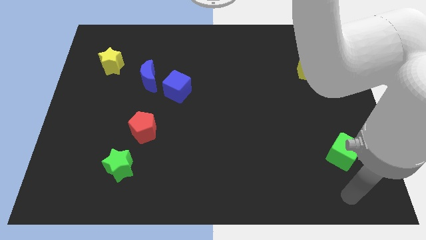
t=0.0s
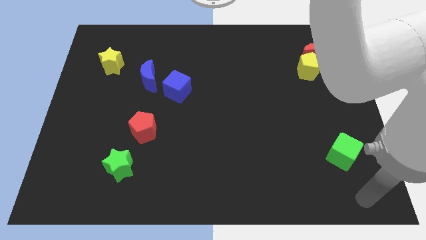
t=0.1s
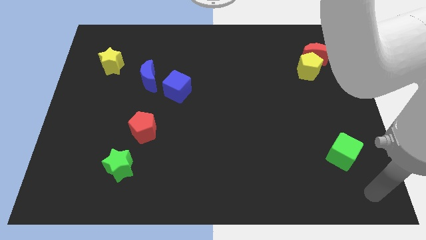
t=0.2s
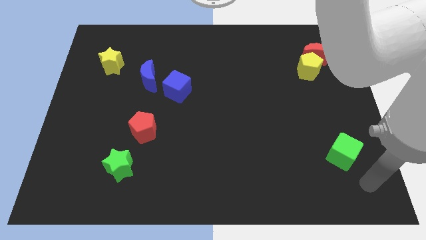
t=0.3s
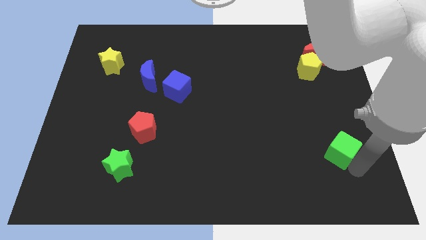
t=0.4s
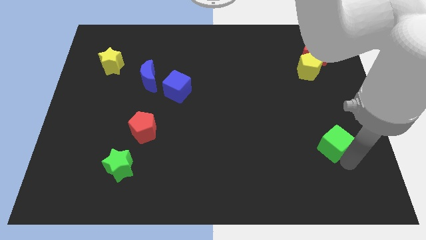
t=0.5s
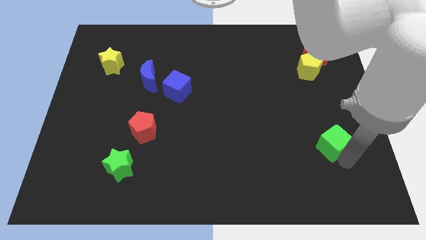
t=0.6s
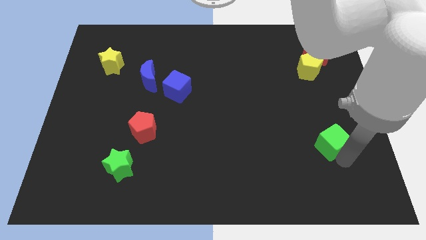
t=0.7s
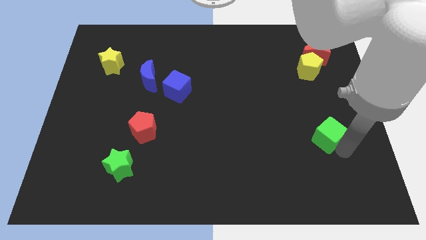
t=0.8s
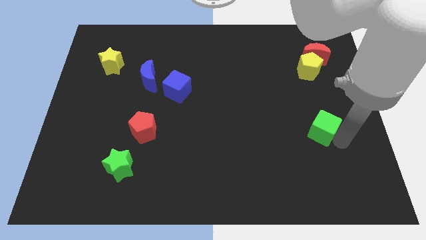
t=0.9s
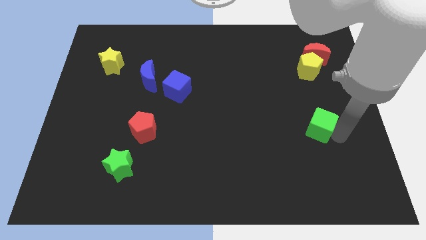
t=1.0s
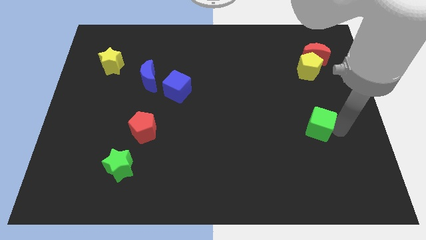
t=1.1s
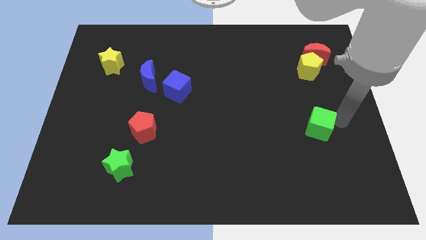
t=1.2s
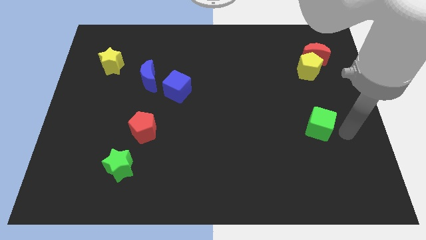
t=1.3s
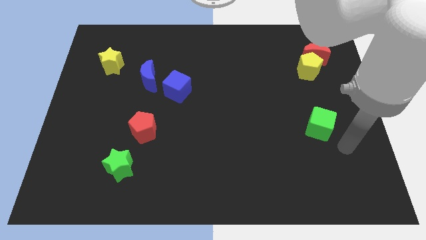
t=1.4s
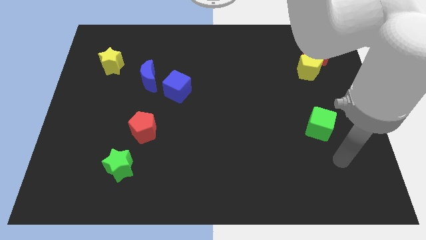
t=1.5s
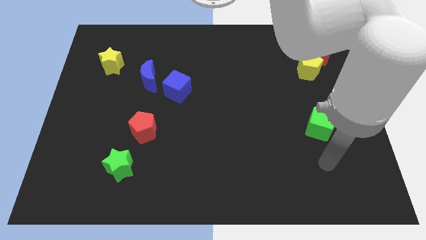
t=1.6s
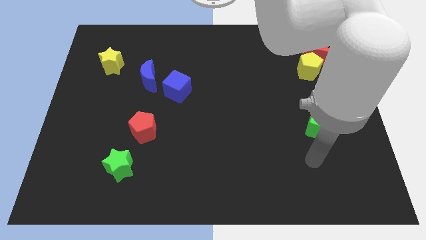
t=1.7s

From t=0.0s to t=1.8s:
push the green cube to the bottom side of the yellow pentagon

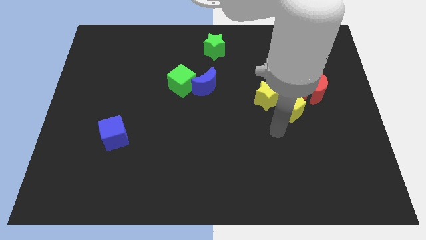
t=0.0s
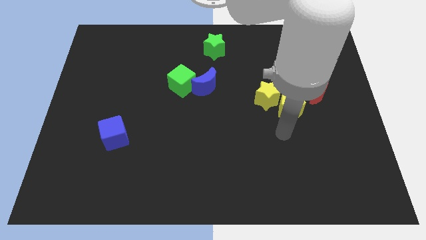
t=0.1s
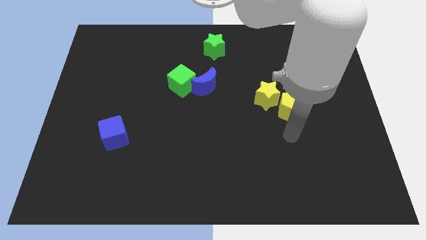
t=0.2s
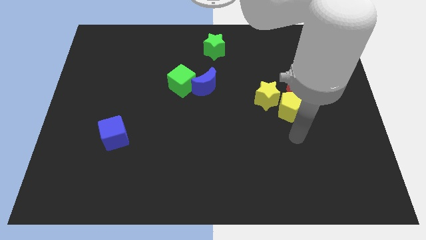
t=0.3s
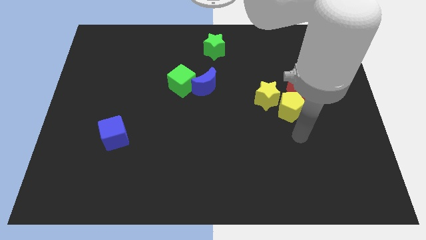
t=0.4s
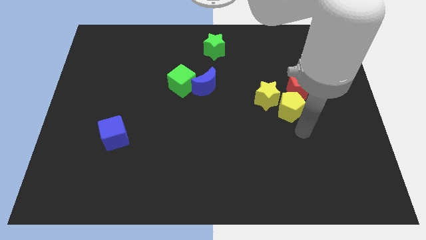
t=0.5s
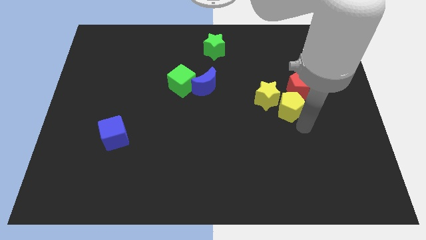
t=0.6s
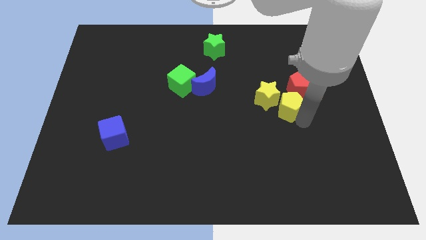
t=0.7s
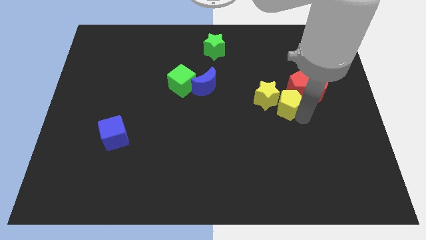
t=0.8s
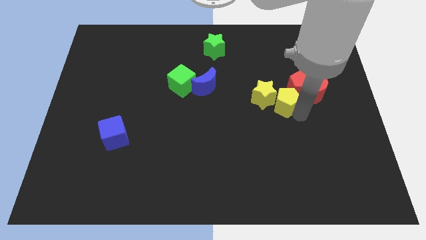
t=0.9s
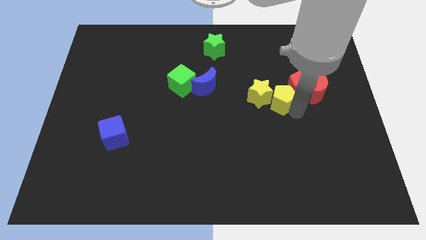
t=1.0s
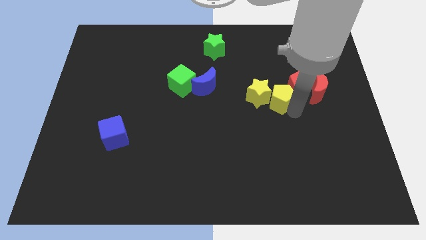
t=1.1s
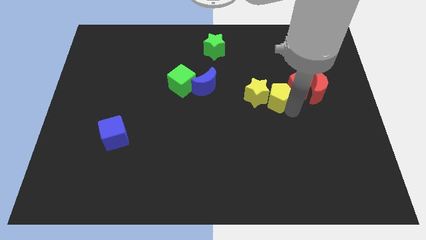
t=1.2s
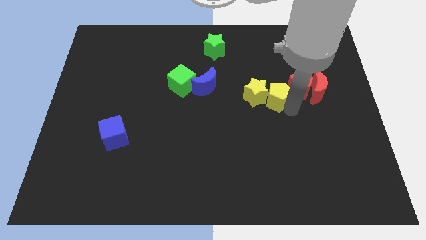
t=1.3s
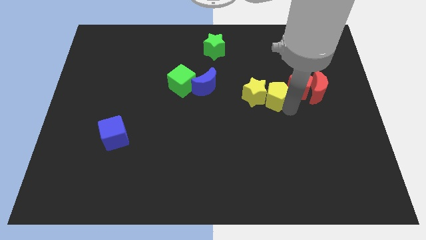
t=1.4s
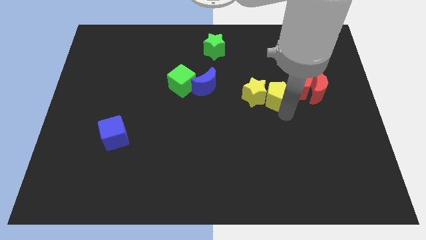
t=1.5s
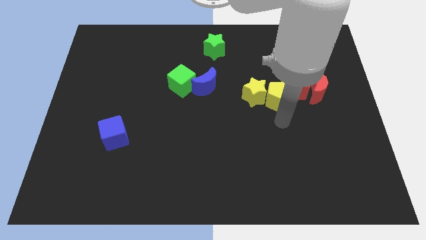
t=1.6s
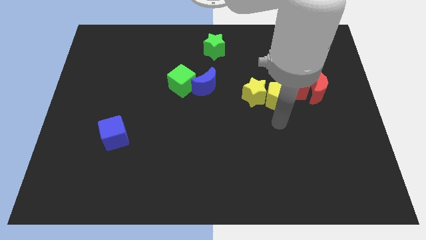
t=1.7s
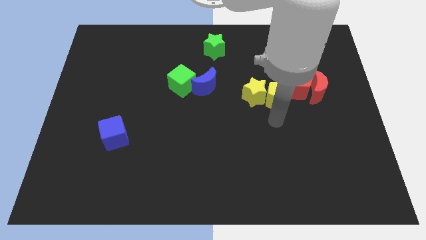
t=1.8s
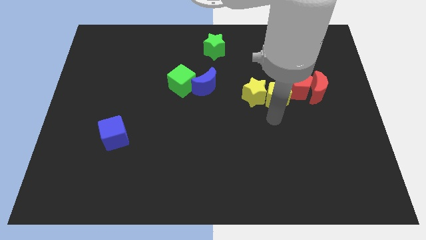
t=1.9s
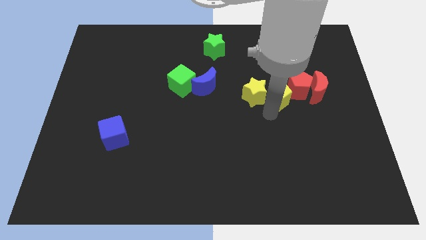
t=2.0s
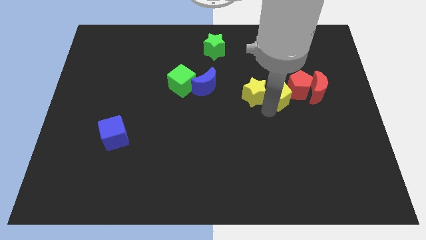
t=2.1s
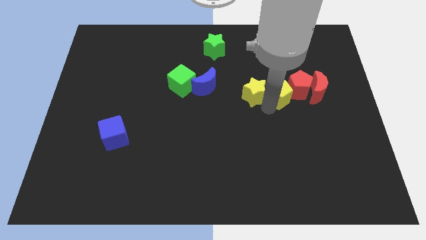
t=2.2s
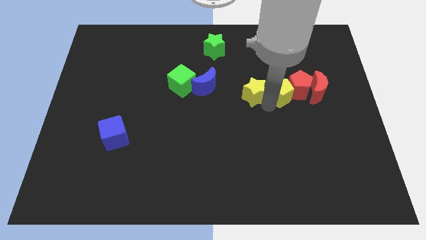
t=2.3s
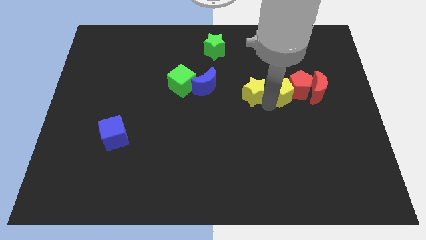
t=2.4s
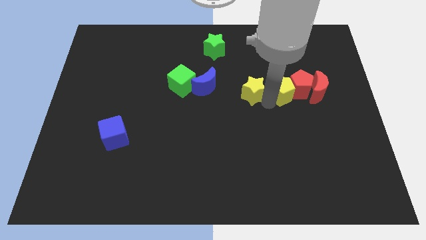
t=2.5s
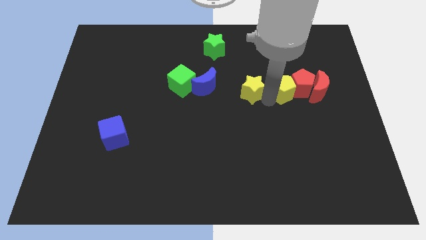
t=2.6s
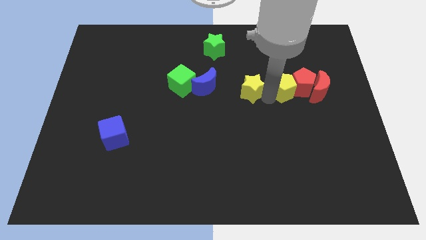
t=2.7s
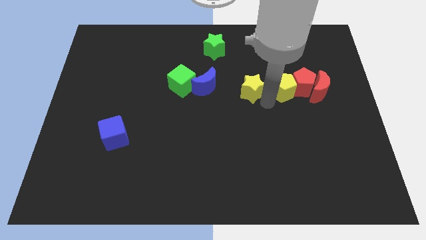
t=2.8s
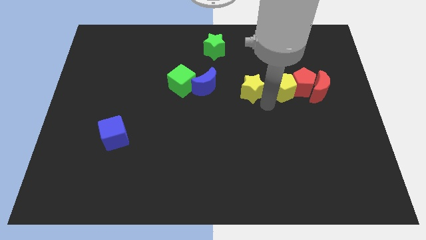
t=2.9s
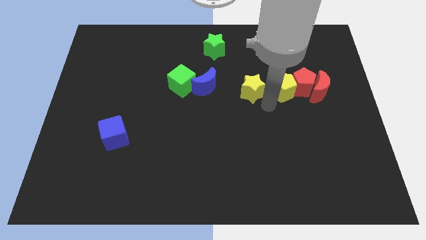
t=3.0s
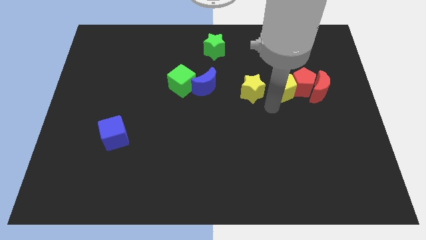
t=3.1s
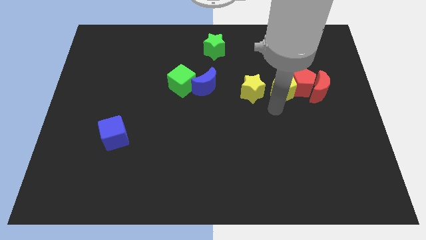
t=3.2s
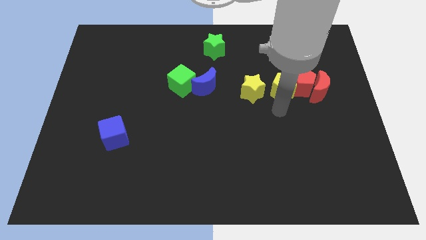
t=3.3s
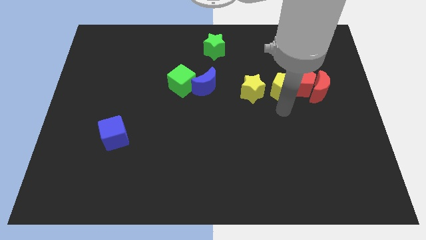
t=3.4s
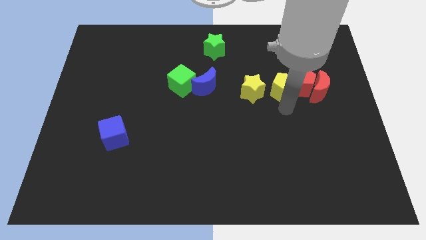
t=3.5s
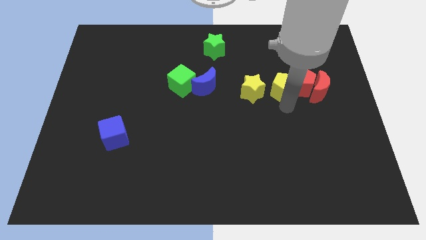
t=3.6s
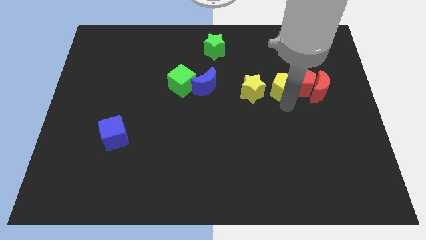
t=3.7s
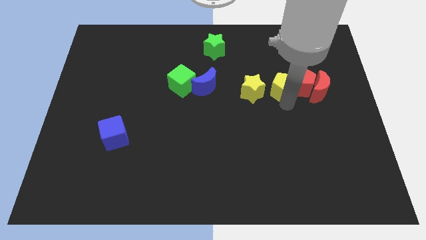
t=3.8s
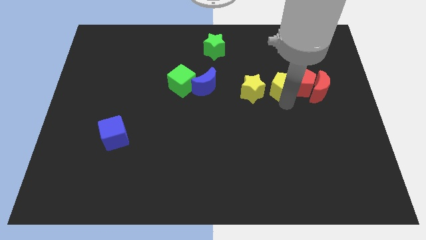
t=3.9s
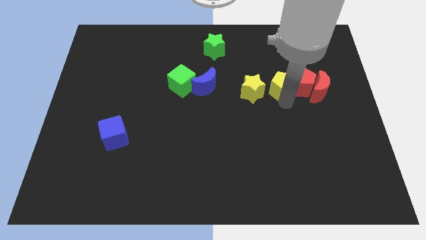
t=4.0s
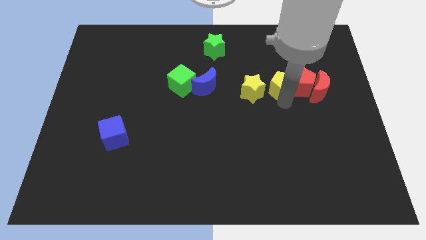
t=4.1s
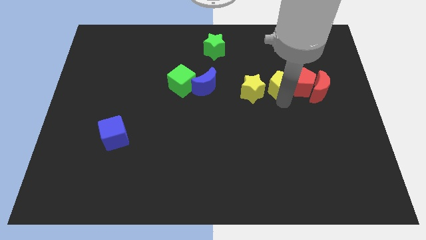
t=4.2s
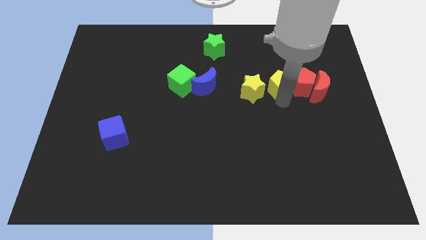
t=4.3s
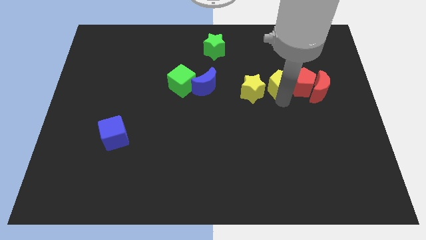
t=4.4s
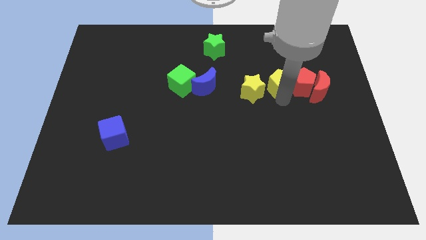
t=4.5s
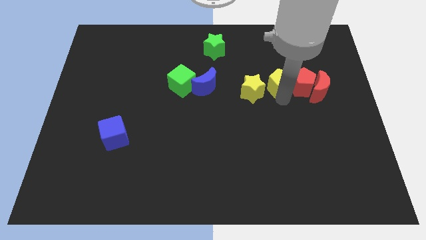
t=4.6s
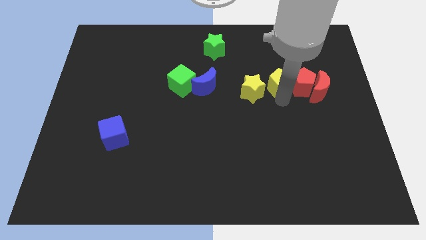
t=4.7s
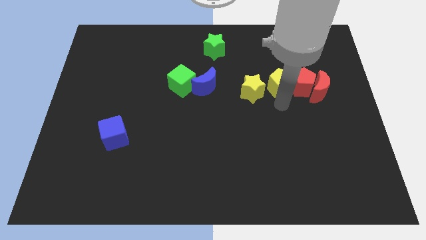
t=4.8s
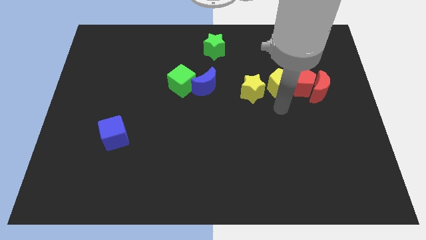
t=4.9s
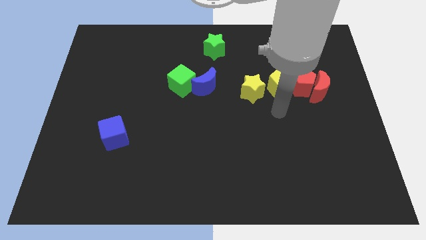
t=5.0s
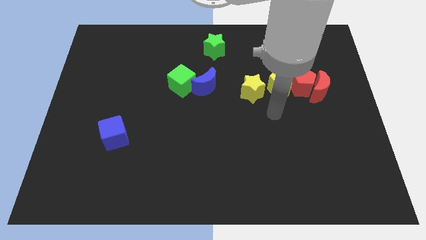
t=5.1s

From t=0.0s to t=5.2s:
place the yellow star and yellow pentagon left to the red pentagon

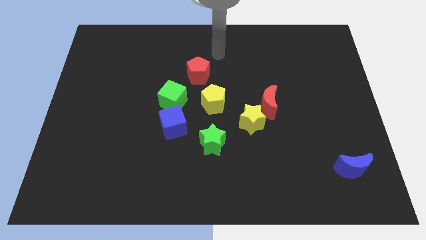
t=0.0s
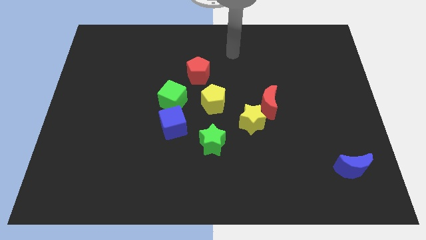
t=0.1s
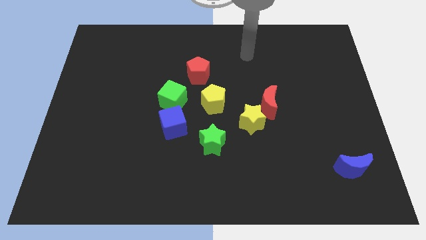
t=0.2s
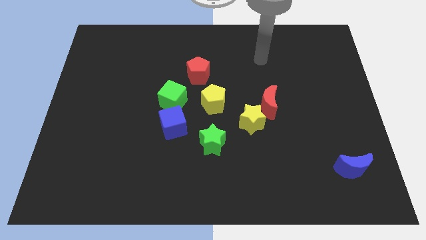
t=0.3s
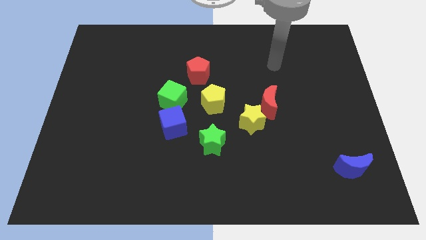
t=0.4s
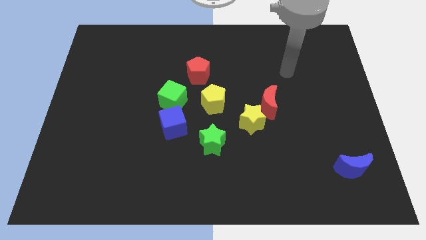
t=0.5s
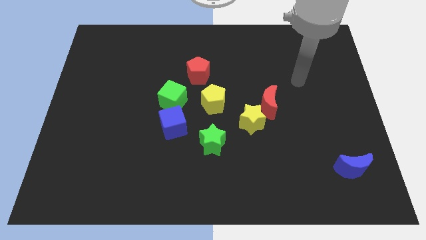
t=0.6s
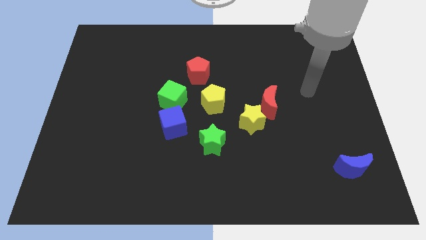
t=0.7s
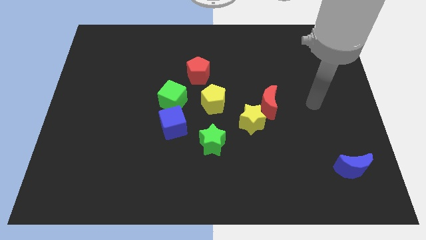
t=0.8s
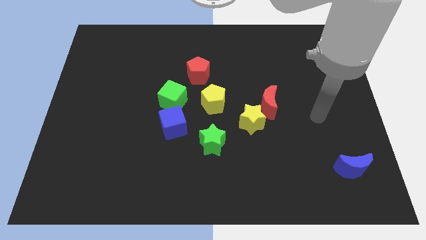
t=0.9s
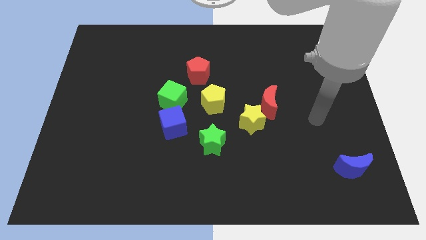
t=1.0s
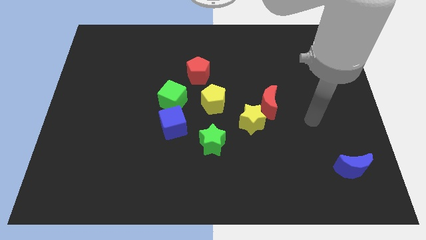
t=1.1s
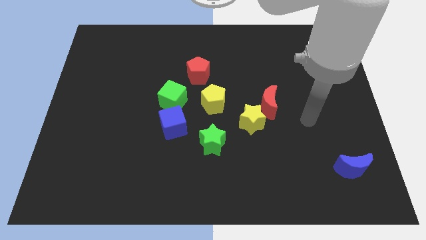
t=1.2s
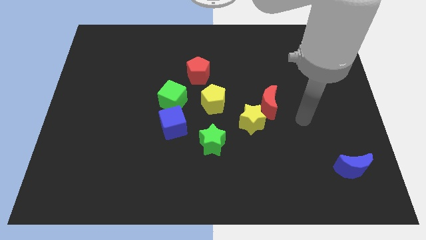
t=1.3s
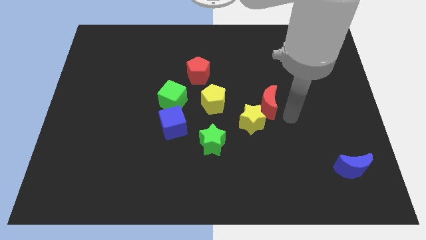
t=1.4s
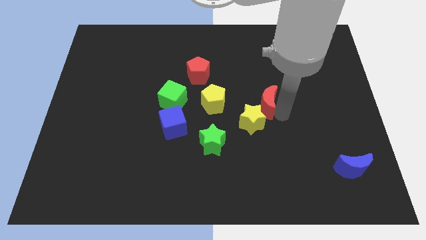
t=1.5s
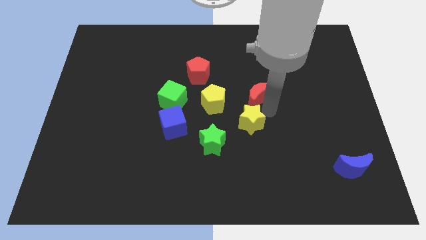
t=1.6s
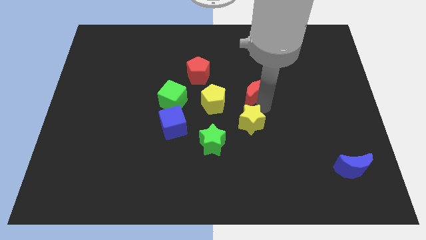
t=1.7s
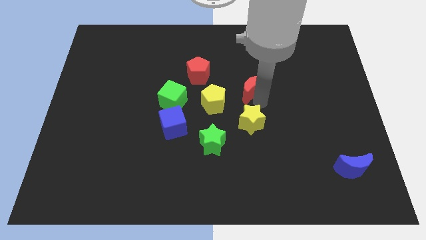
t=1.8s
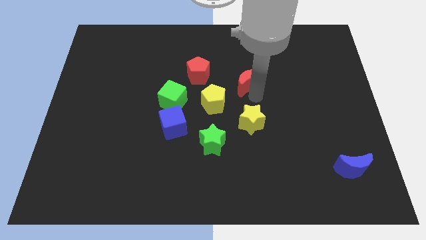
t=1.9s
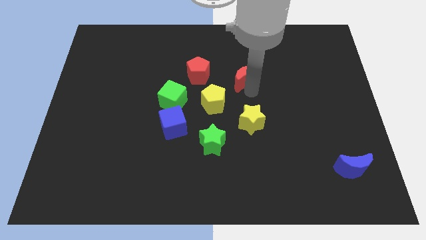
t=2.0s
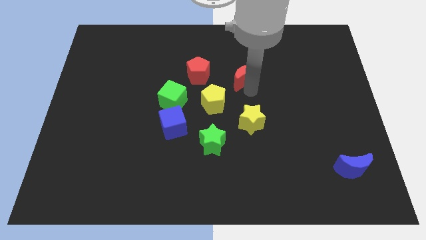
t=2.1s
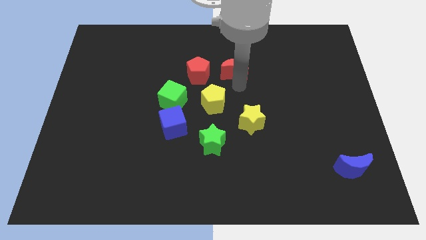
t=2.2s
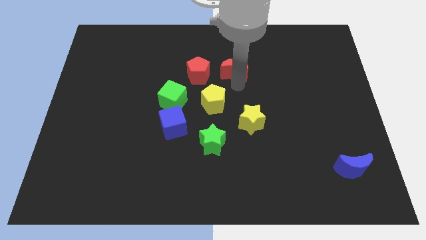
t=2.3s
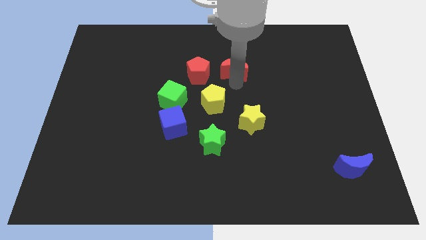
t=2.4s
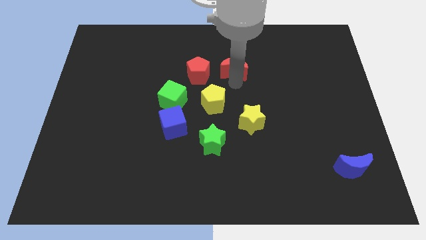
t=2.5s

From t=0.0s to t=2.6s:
separate the red moon and yellow star
